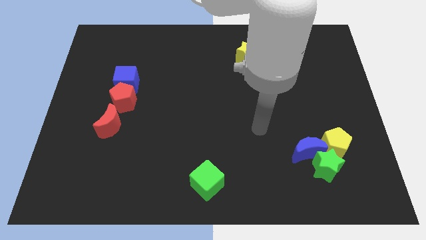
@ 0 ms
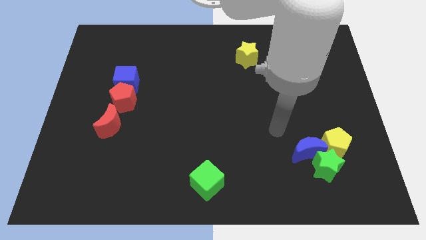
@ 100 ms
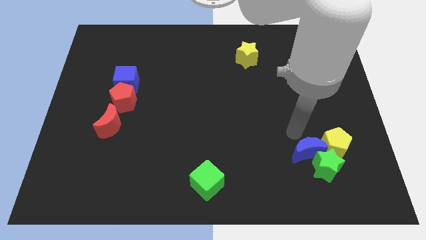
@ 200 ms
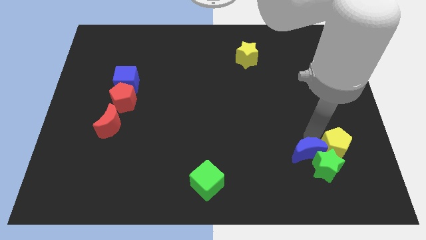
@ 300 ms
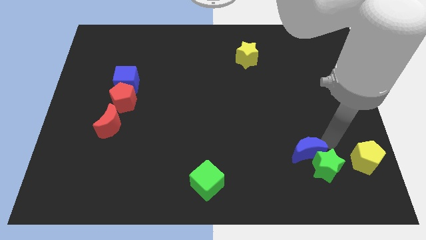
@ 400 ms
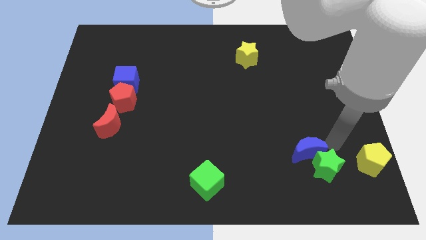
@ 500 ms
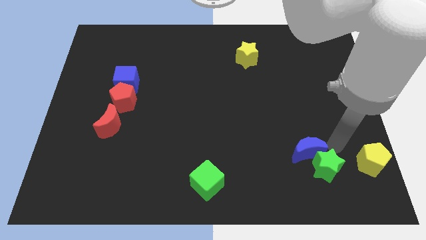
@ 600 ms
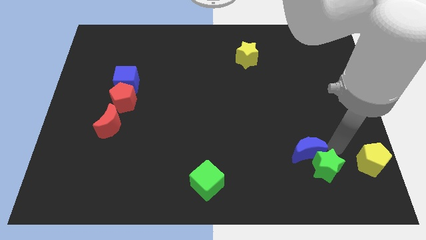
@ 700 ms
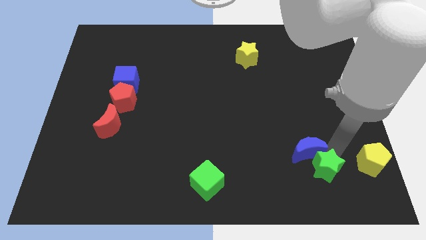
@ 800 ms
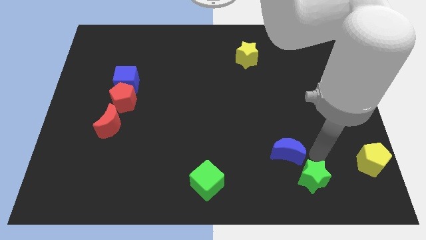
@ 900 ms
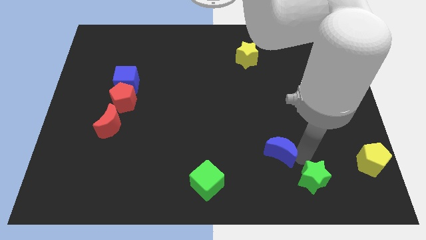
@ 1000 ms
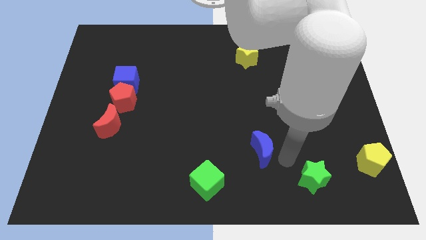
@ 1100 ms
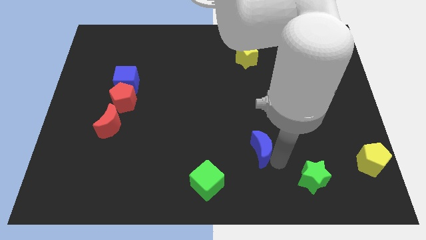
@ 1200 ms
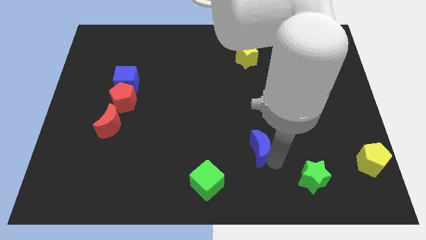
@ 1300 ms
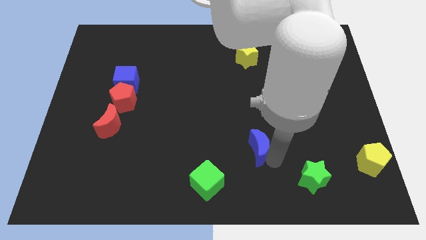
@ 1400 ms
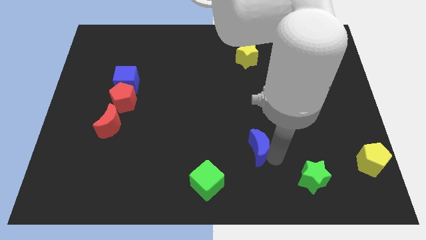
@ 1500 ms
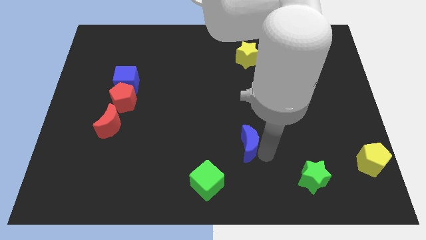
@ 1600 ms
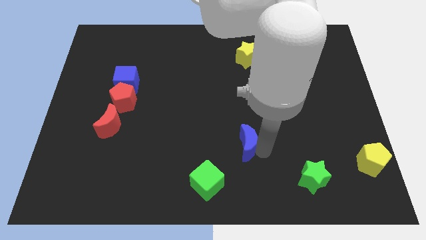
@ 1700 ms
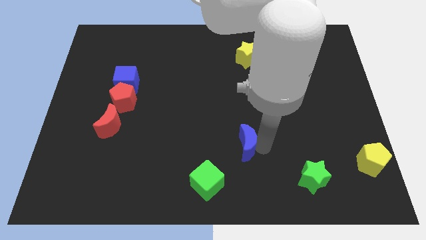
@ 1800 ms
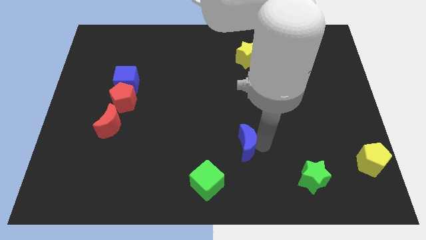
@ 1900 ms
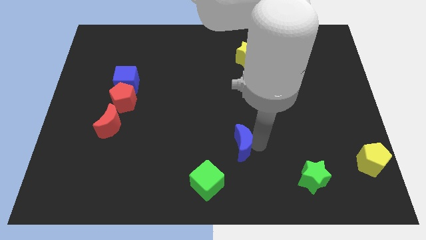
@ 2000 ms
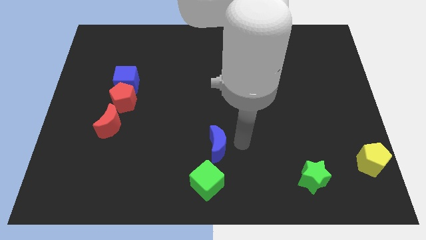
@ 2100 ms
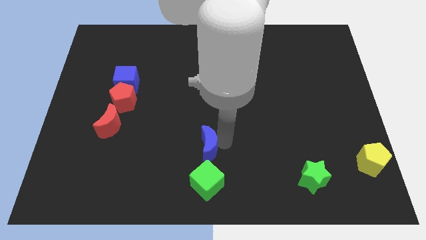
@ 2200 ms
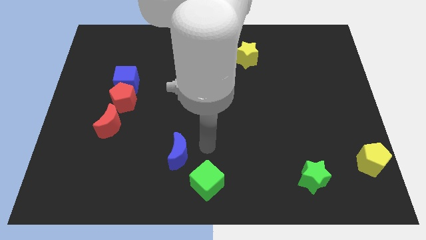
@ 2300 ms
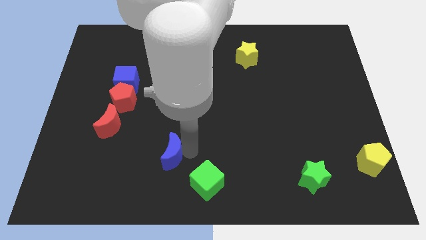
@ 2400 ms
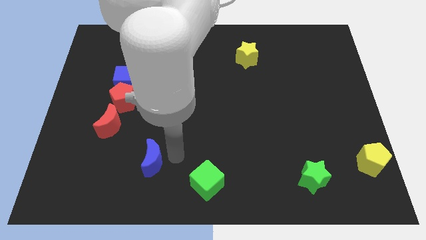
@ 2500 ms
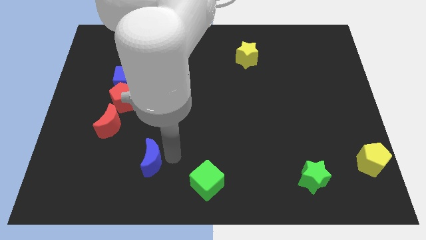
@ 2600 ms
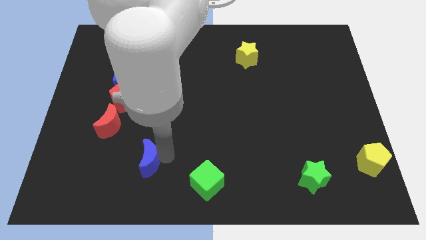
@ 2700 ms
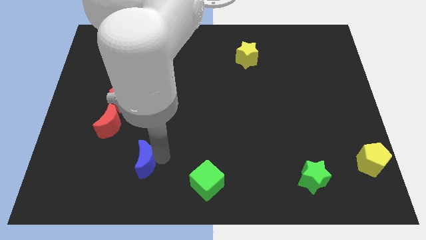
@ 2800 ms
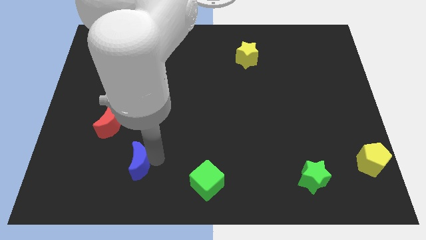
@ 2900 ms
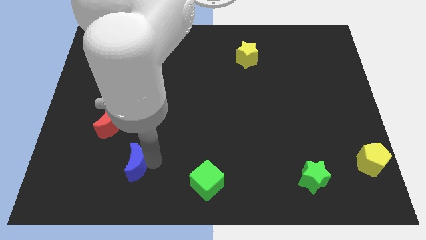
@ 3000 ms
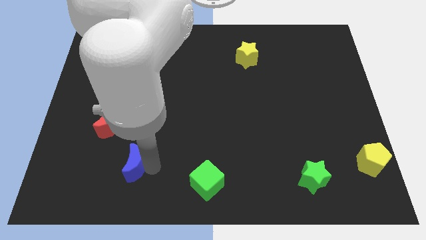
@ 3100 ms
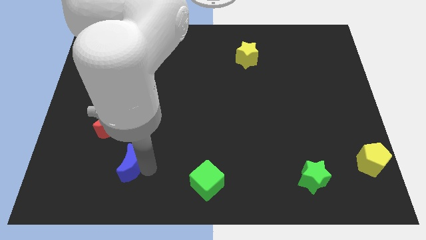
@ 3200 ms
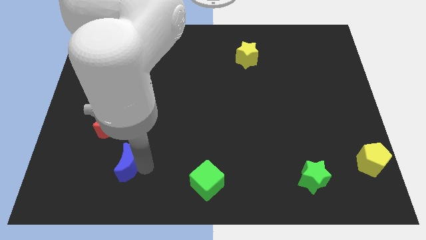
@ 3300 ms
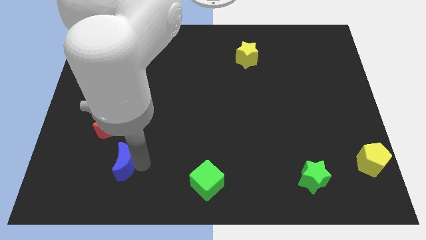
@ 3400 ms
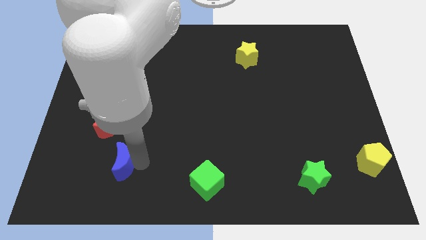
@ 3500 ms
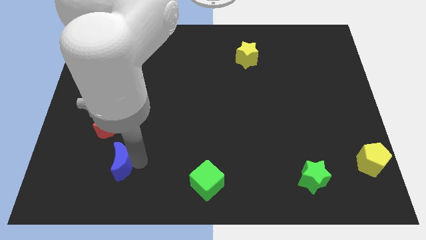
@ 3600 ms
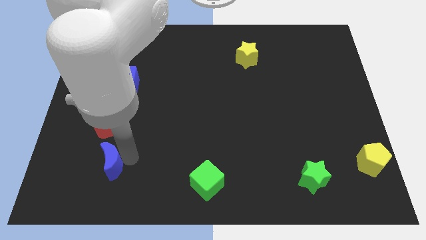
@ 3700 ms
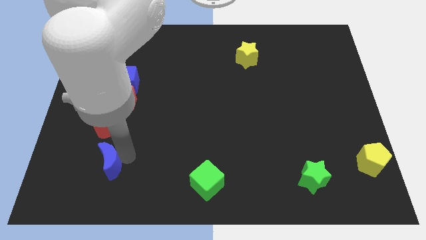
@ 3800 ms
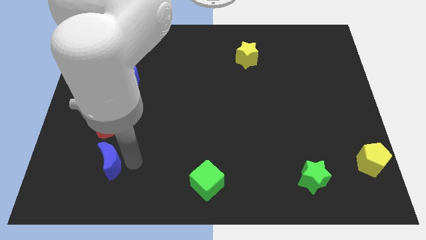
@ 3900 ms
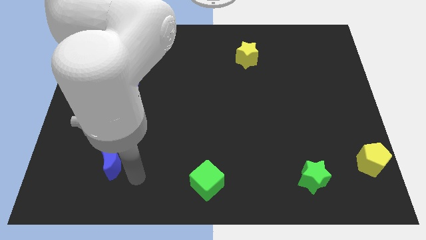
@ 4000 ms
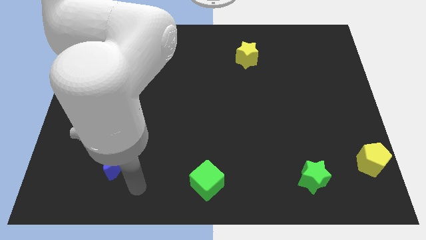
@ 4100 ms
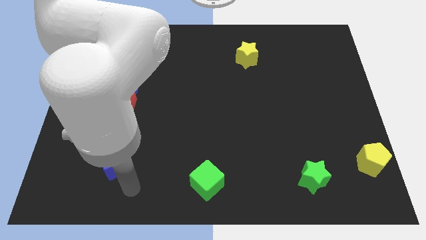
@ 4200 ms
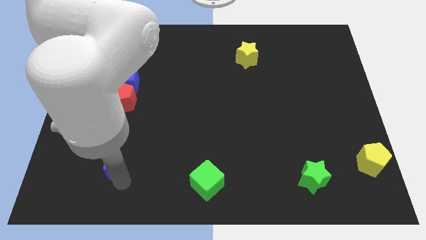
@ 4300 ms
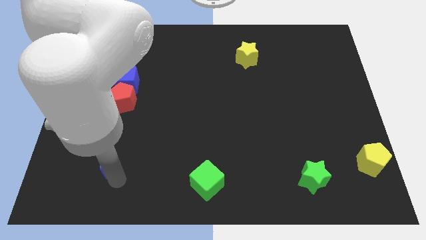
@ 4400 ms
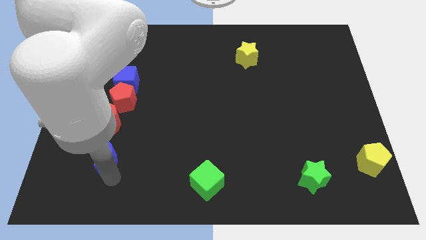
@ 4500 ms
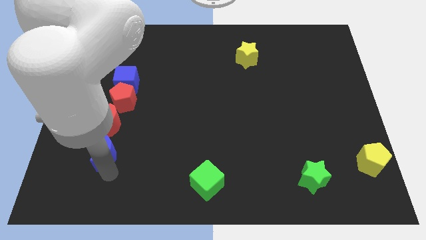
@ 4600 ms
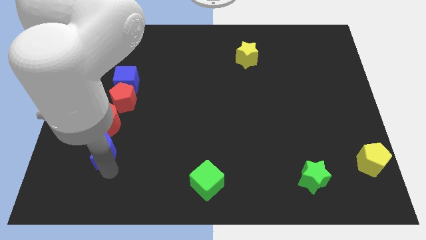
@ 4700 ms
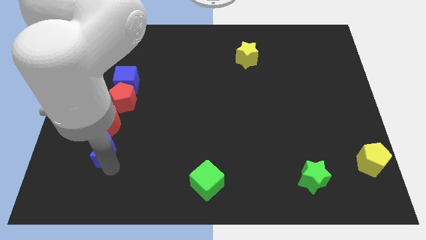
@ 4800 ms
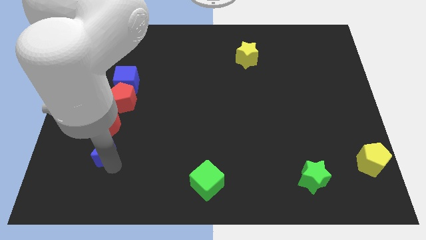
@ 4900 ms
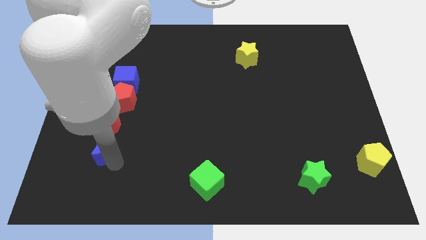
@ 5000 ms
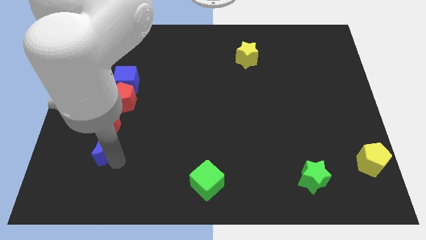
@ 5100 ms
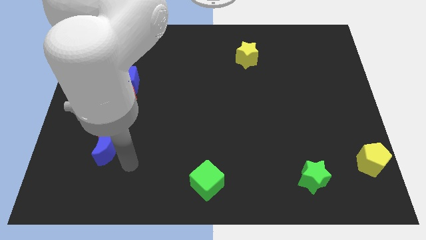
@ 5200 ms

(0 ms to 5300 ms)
place the blue crescent into the bottom of the red crescent

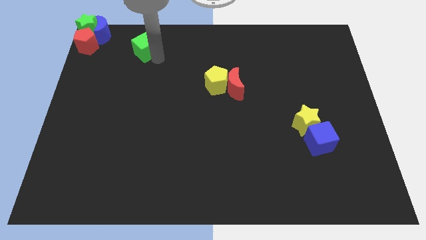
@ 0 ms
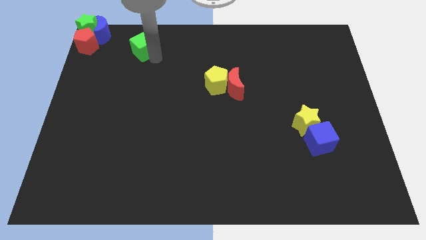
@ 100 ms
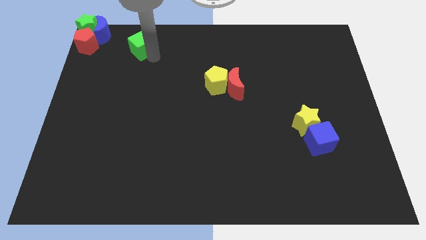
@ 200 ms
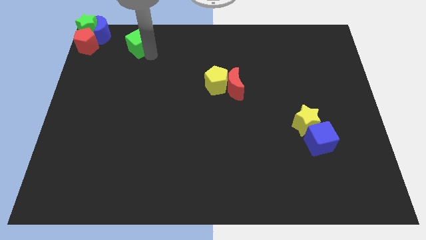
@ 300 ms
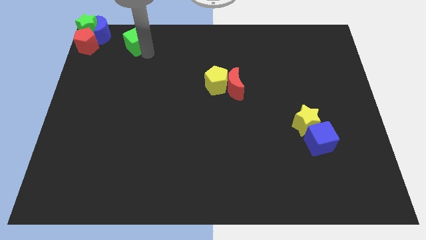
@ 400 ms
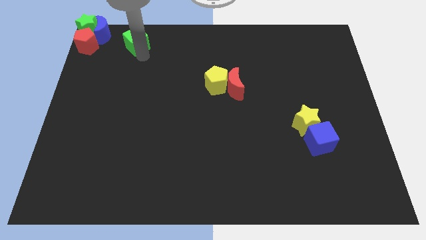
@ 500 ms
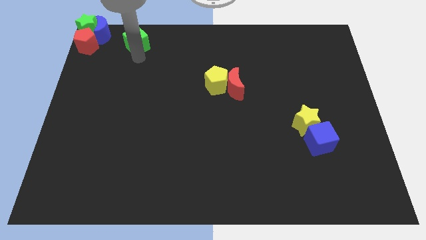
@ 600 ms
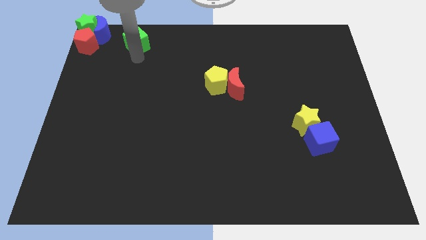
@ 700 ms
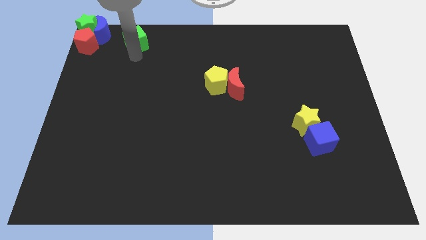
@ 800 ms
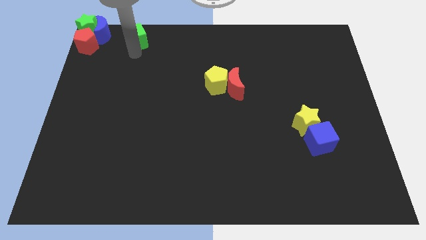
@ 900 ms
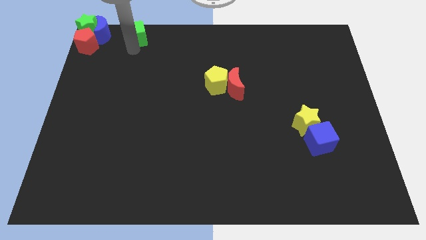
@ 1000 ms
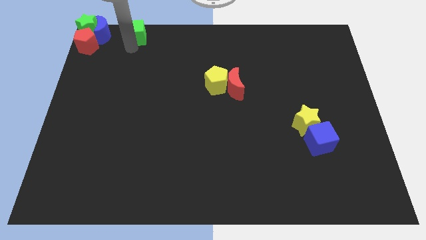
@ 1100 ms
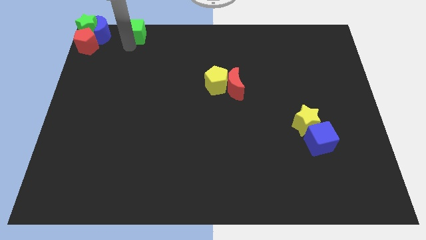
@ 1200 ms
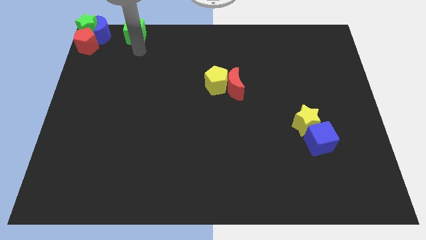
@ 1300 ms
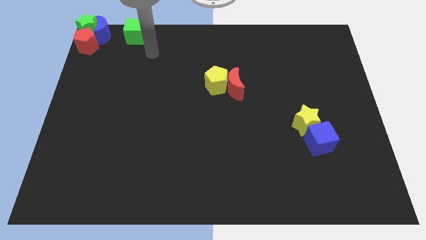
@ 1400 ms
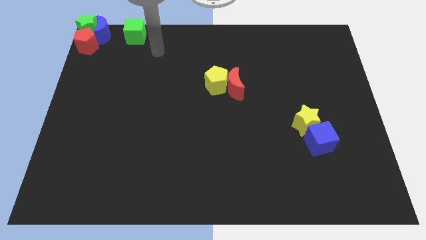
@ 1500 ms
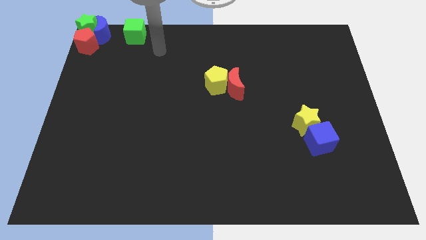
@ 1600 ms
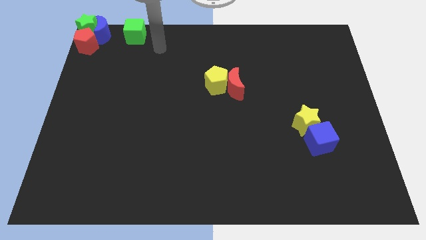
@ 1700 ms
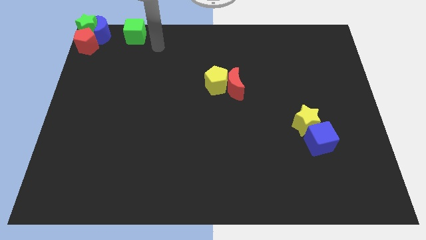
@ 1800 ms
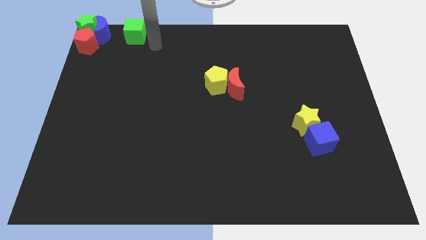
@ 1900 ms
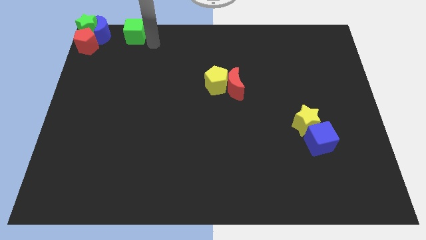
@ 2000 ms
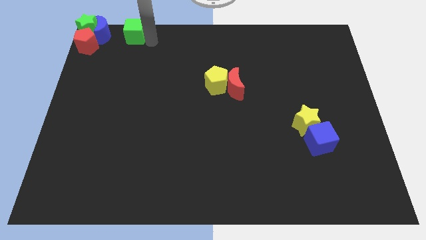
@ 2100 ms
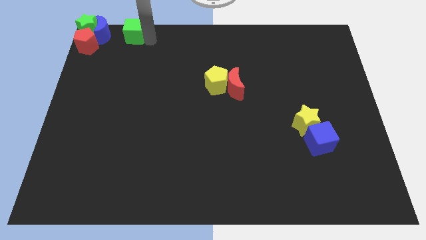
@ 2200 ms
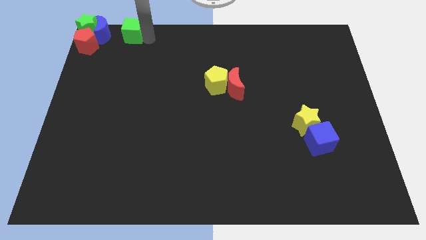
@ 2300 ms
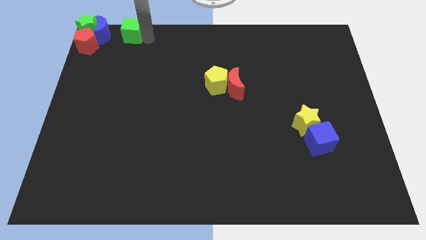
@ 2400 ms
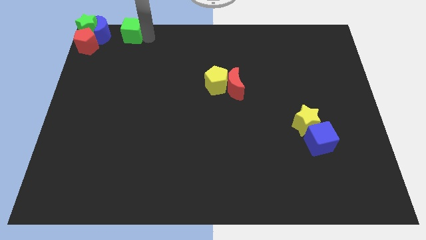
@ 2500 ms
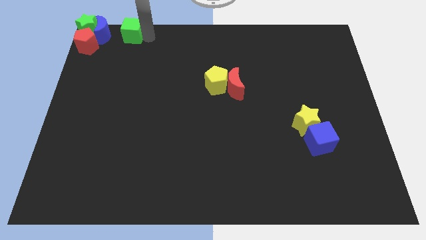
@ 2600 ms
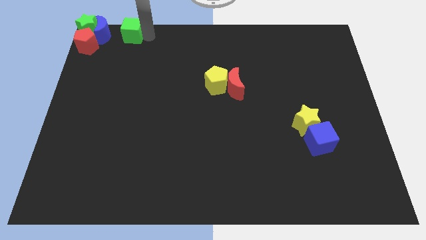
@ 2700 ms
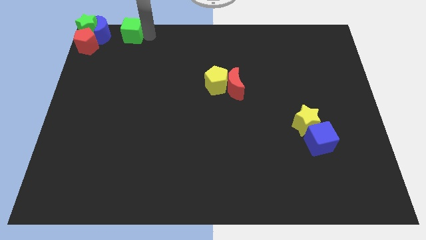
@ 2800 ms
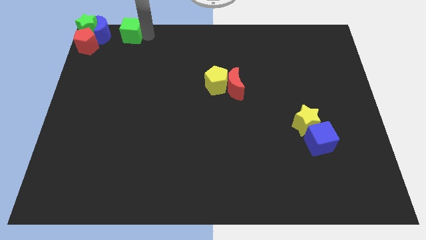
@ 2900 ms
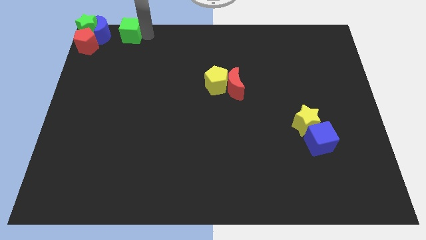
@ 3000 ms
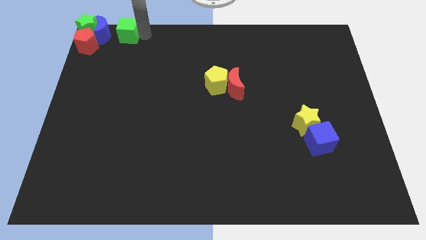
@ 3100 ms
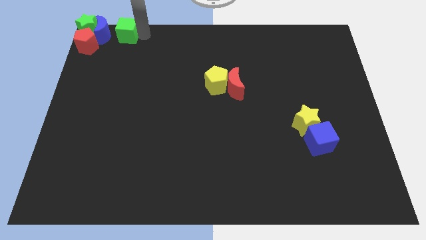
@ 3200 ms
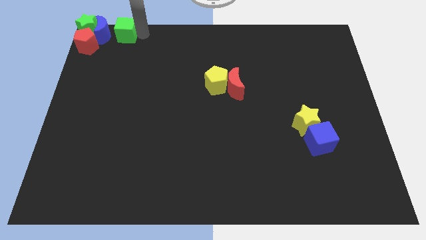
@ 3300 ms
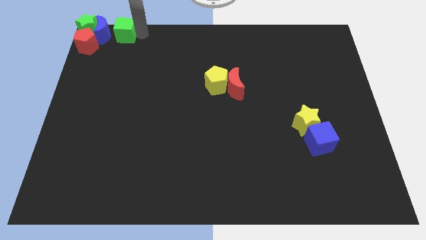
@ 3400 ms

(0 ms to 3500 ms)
move the green cube closely to the right side of blue moon

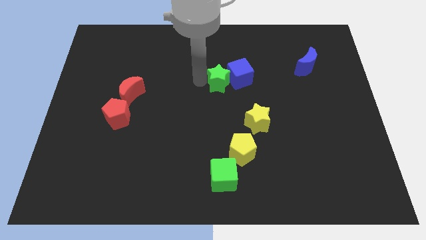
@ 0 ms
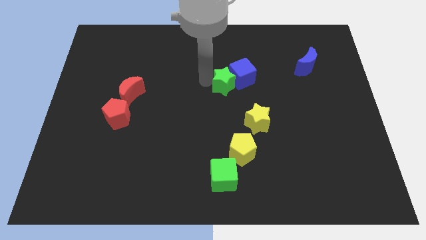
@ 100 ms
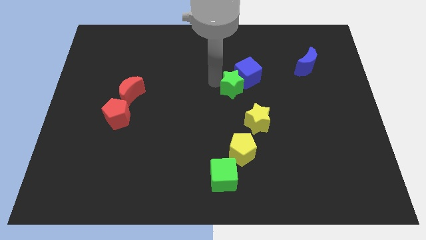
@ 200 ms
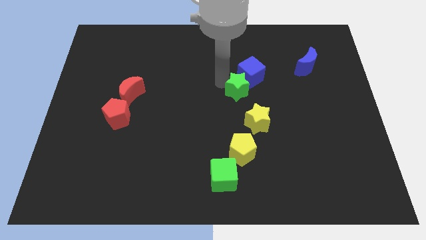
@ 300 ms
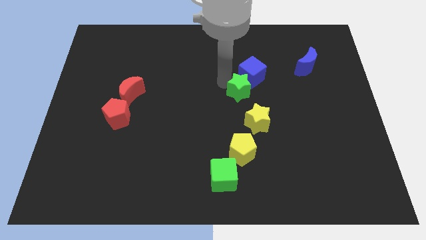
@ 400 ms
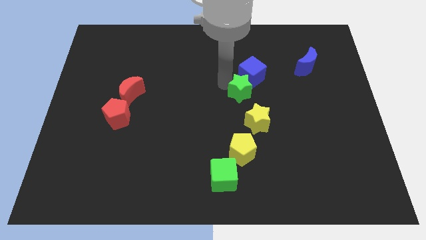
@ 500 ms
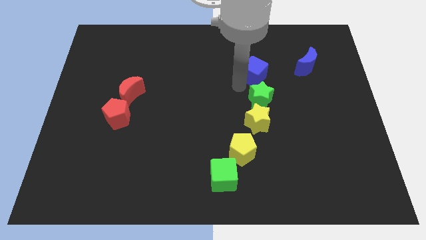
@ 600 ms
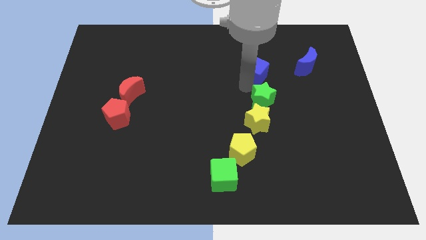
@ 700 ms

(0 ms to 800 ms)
place the green star above the yellow star
